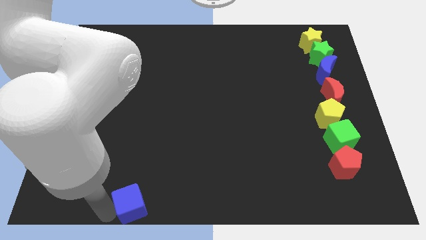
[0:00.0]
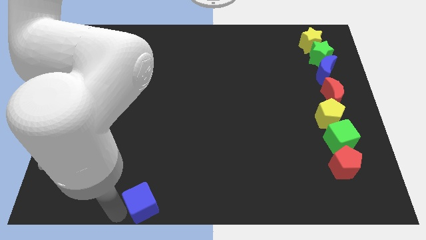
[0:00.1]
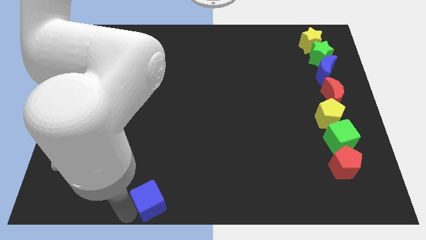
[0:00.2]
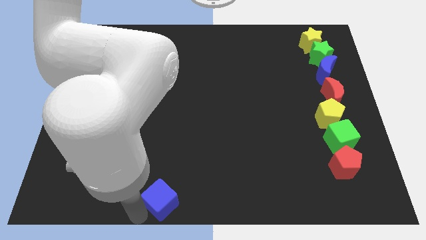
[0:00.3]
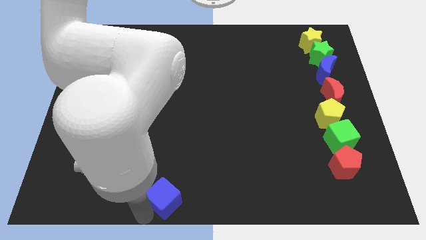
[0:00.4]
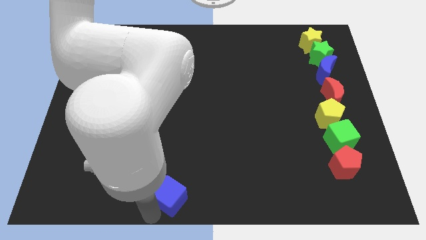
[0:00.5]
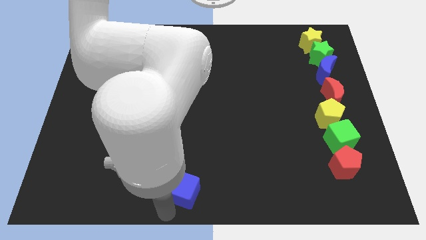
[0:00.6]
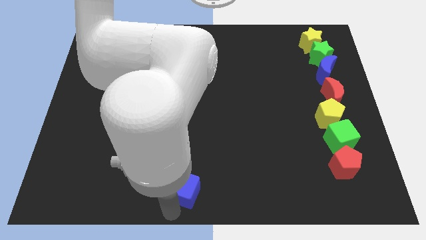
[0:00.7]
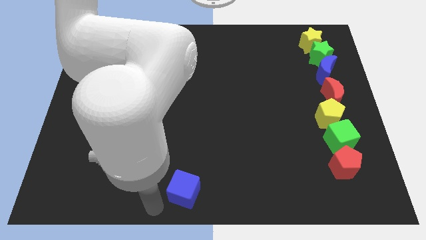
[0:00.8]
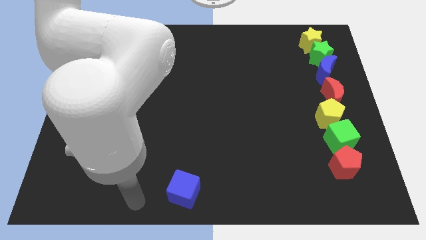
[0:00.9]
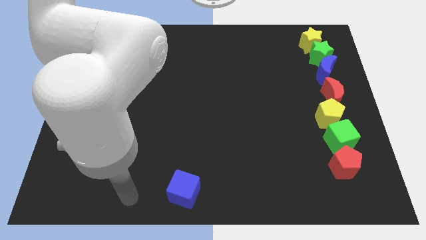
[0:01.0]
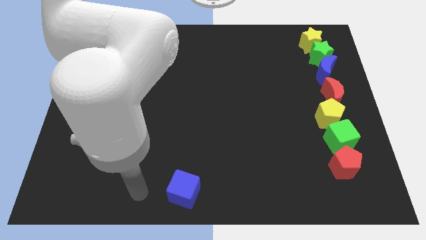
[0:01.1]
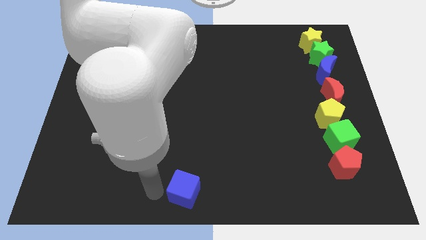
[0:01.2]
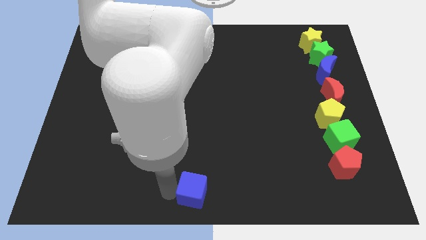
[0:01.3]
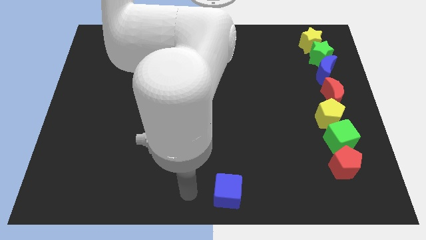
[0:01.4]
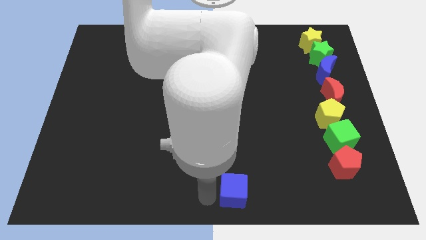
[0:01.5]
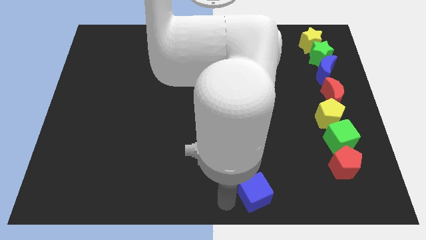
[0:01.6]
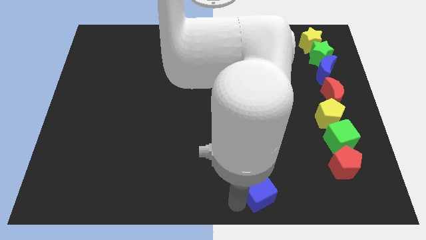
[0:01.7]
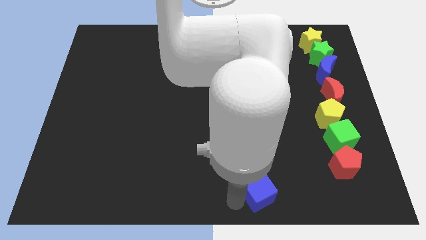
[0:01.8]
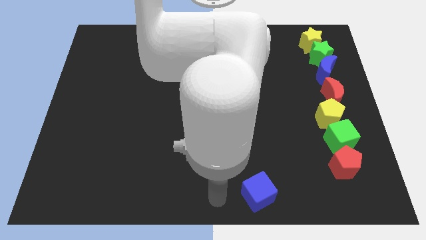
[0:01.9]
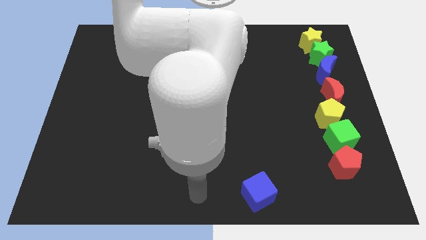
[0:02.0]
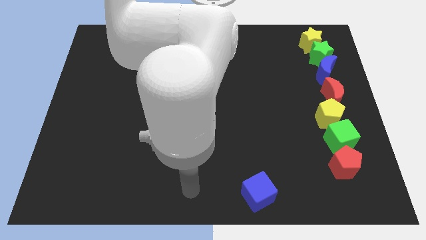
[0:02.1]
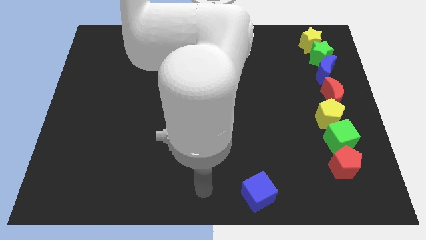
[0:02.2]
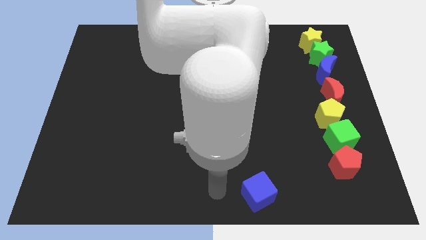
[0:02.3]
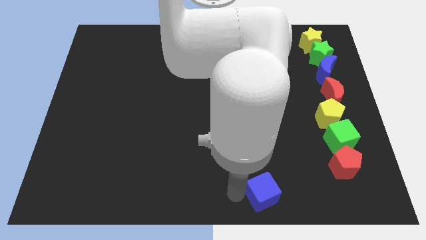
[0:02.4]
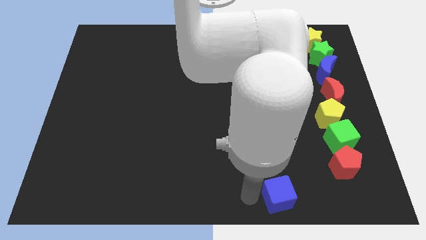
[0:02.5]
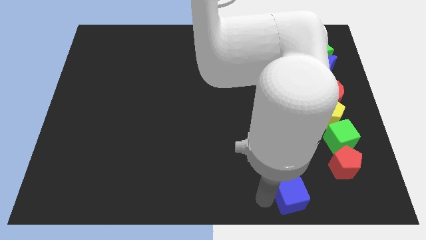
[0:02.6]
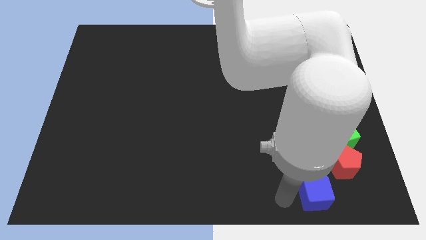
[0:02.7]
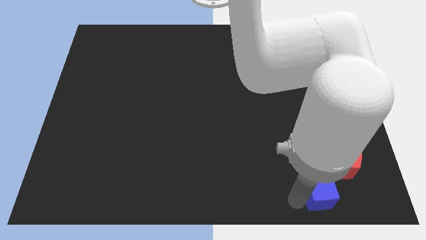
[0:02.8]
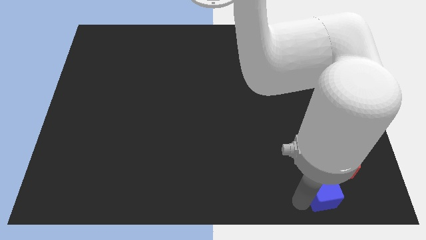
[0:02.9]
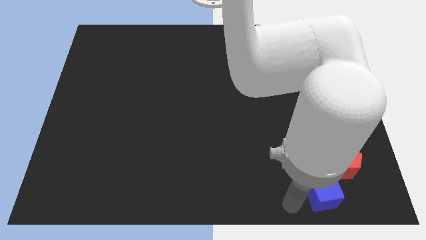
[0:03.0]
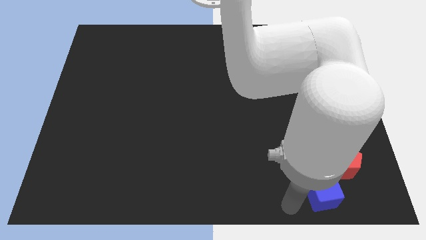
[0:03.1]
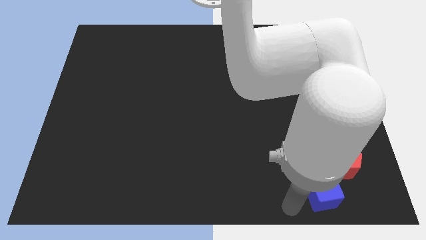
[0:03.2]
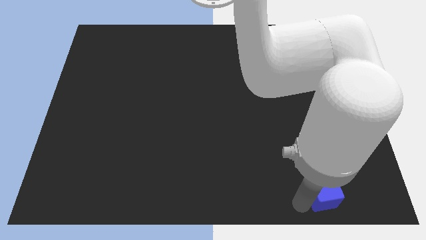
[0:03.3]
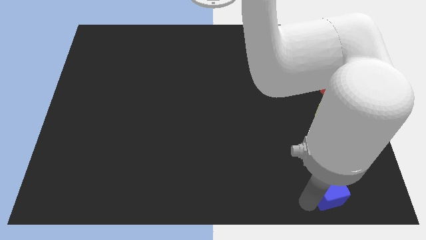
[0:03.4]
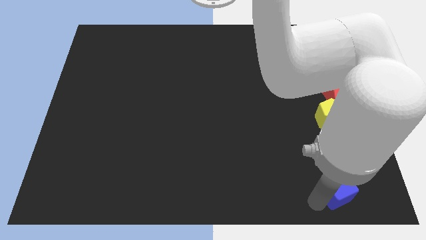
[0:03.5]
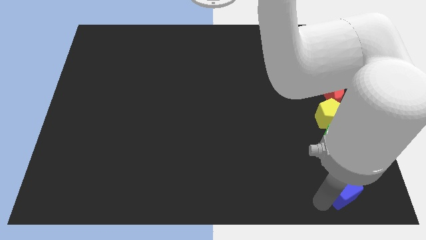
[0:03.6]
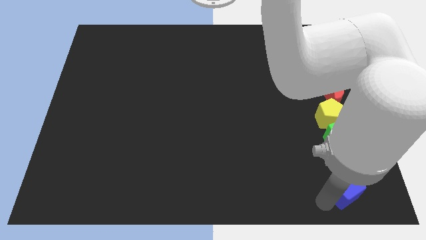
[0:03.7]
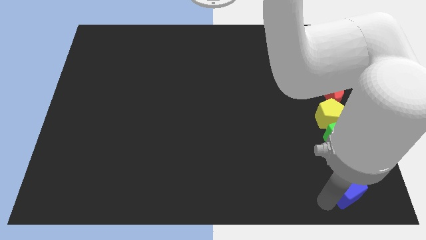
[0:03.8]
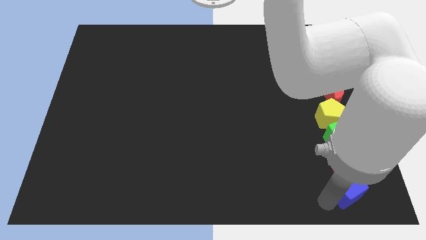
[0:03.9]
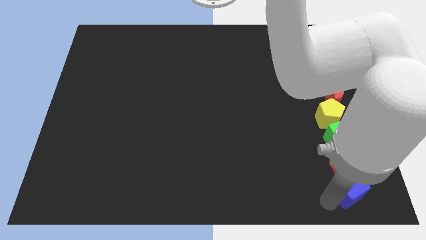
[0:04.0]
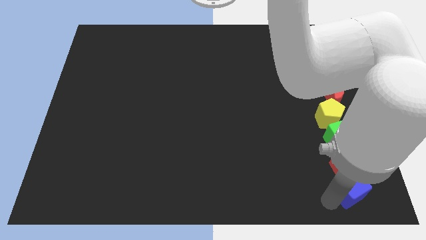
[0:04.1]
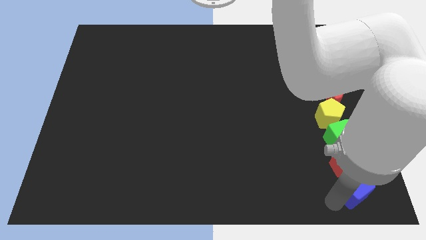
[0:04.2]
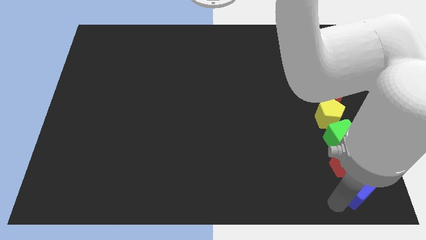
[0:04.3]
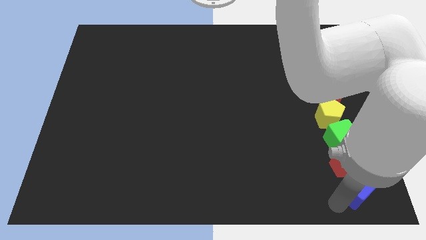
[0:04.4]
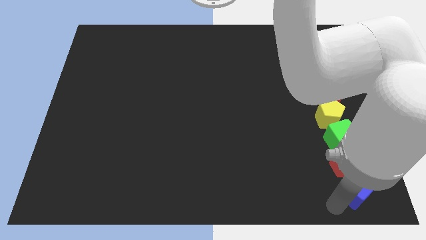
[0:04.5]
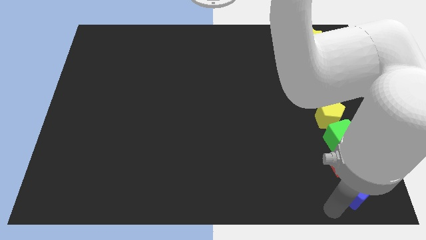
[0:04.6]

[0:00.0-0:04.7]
place the blue cube below the red pentagon

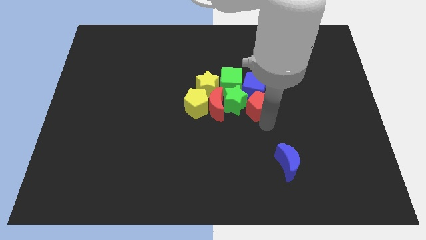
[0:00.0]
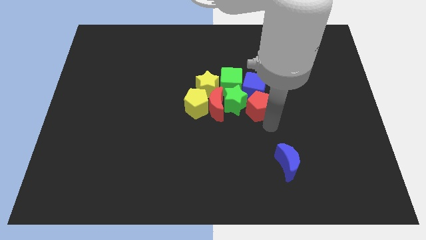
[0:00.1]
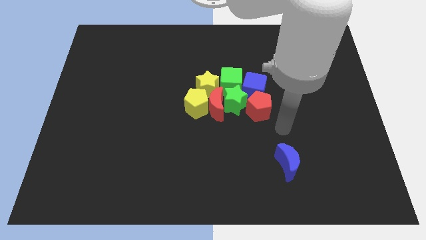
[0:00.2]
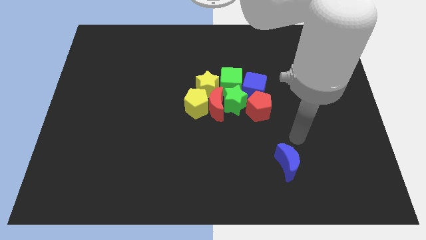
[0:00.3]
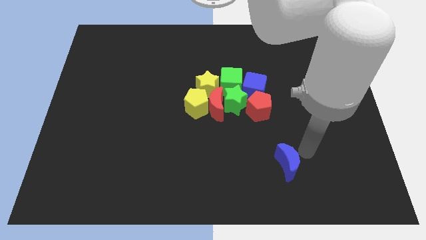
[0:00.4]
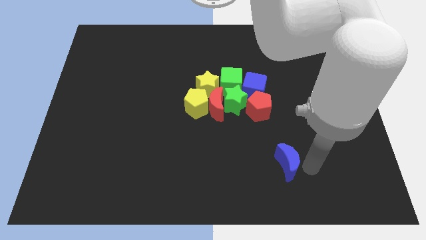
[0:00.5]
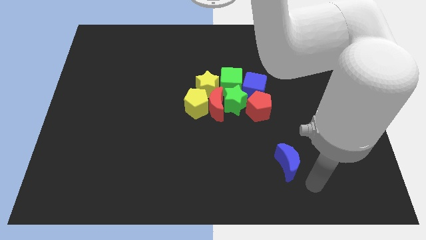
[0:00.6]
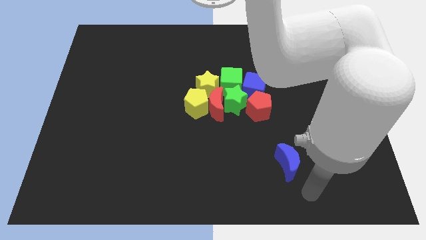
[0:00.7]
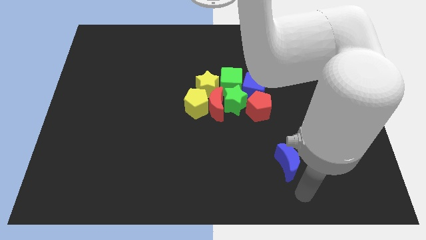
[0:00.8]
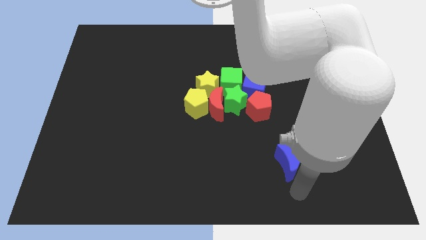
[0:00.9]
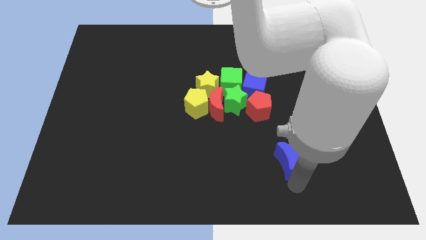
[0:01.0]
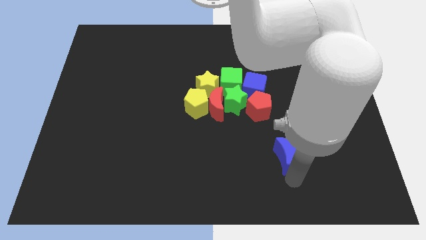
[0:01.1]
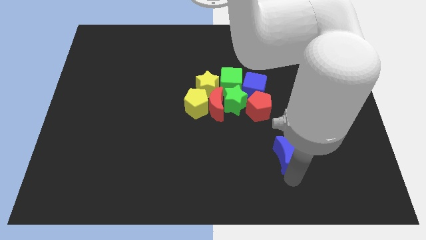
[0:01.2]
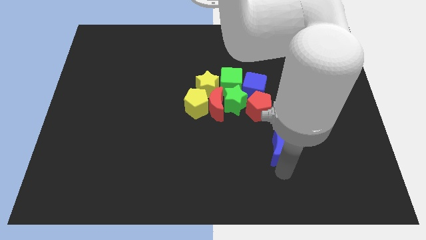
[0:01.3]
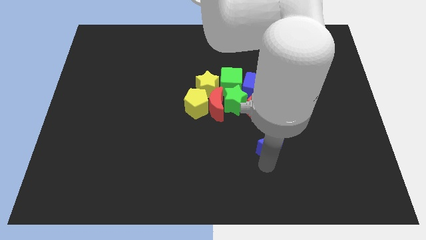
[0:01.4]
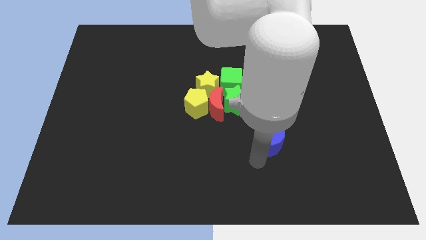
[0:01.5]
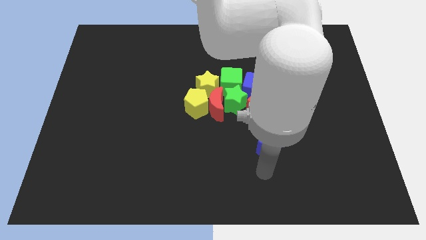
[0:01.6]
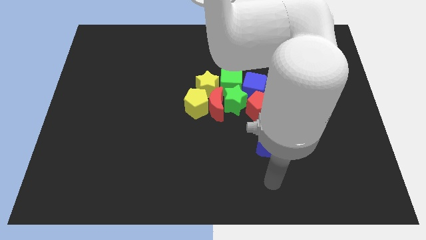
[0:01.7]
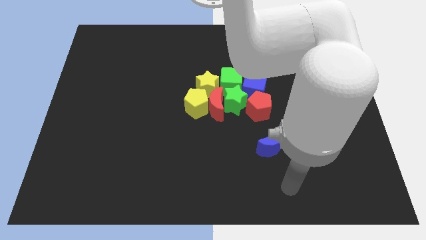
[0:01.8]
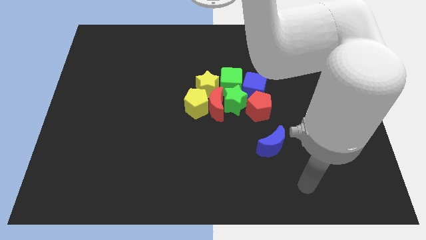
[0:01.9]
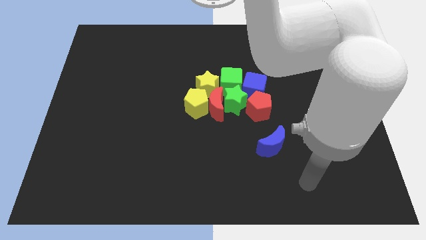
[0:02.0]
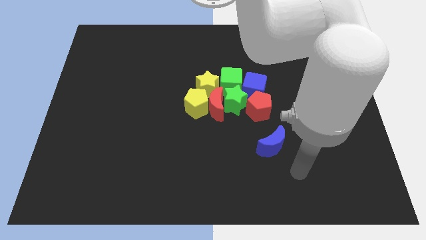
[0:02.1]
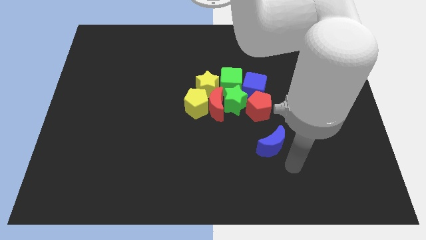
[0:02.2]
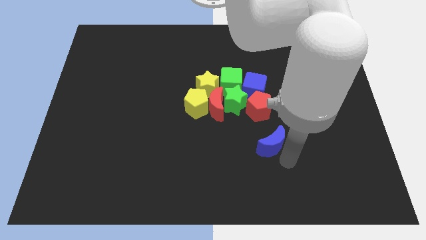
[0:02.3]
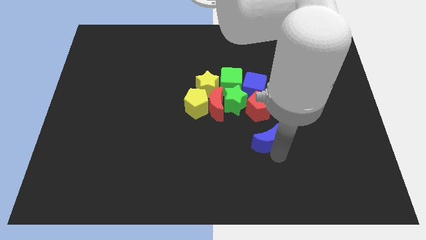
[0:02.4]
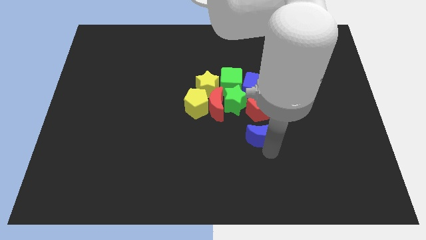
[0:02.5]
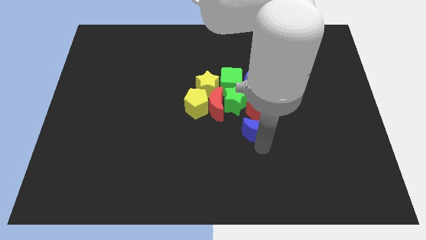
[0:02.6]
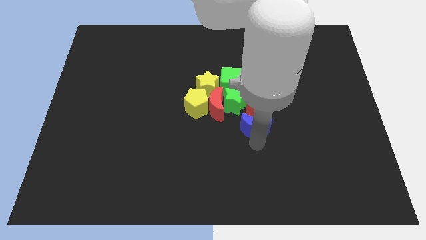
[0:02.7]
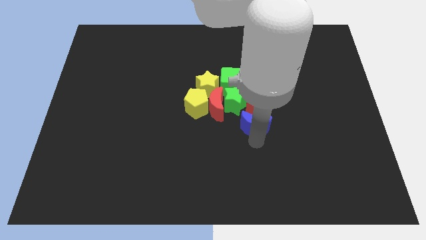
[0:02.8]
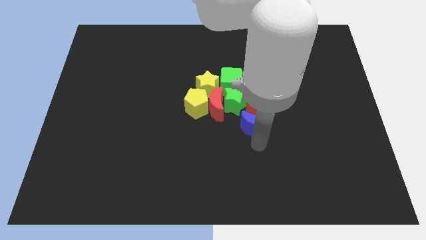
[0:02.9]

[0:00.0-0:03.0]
move the blue moon close to the red pentagon

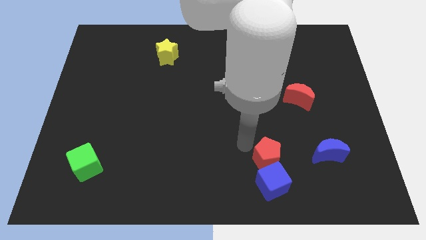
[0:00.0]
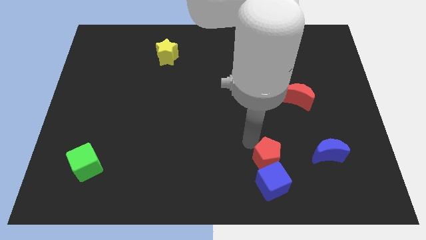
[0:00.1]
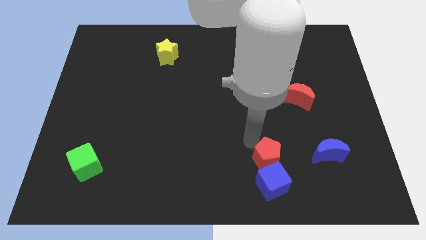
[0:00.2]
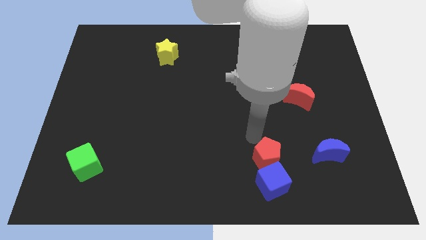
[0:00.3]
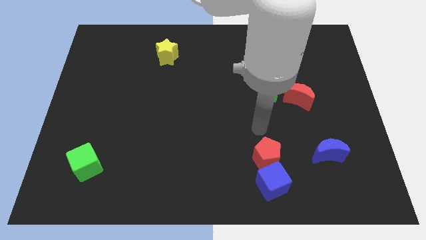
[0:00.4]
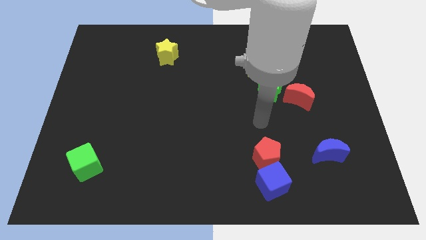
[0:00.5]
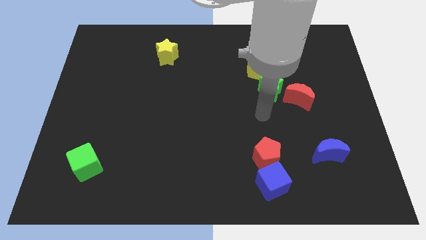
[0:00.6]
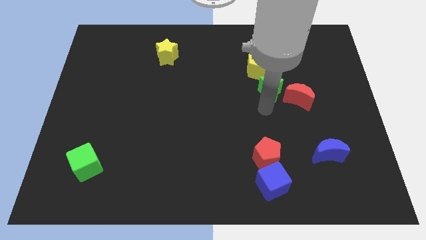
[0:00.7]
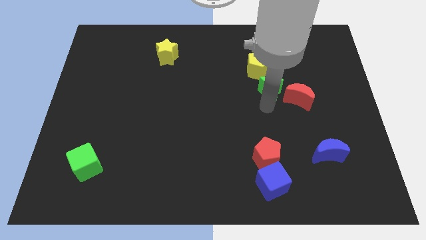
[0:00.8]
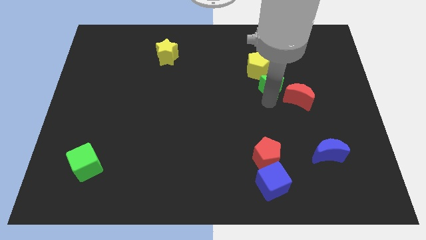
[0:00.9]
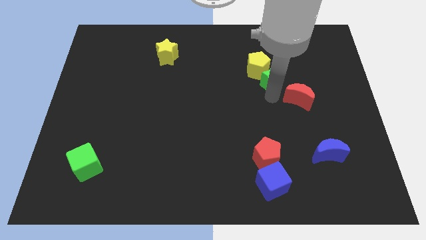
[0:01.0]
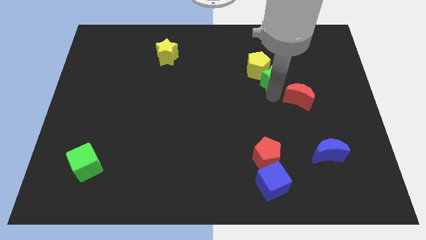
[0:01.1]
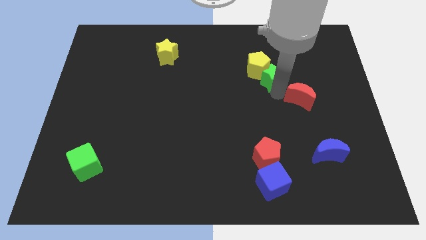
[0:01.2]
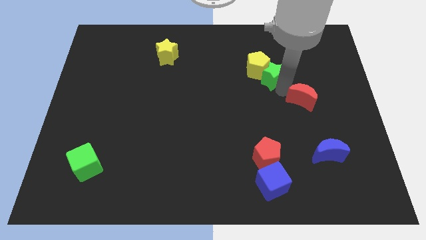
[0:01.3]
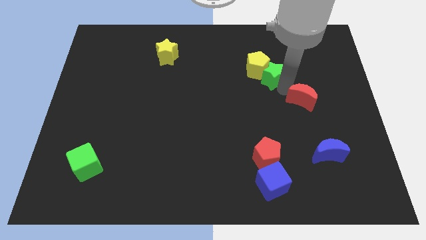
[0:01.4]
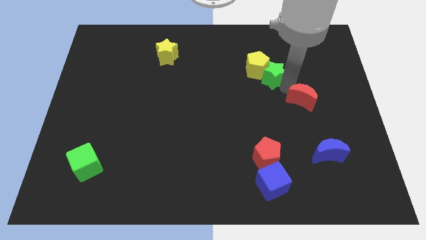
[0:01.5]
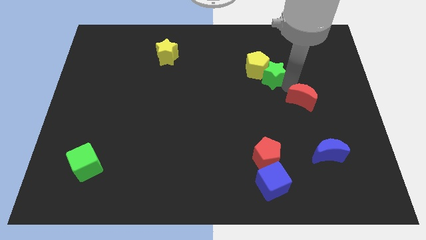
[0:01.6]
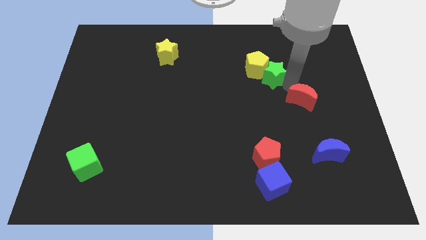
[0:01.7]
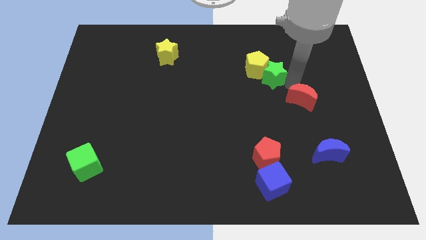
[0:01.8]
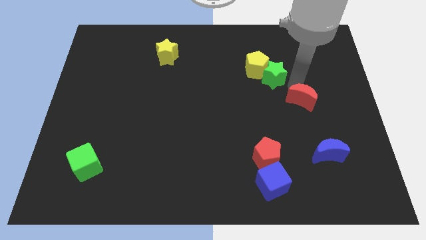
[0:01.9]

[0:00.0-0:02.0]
slightly push the green star into the yellow pentagon
